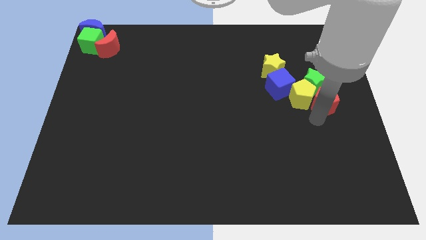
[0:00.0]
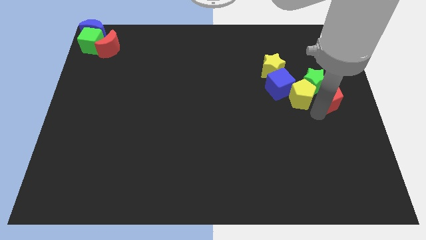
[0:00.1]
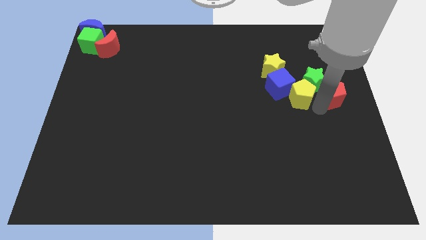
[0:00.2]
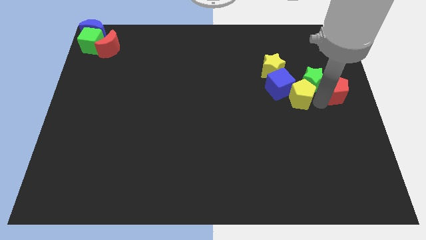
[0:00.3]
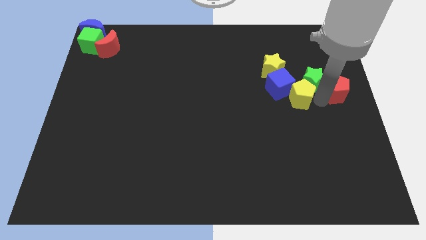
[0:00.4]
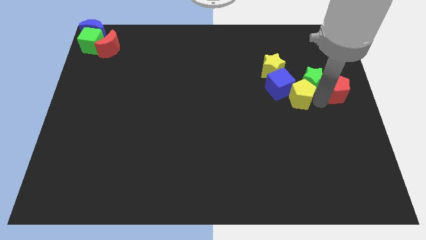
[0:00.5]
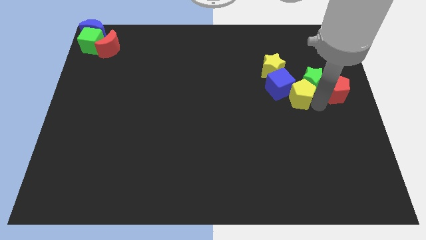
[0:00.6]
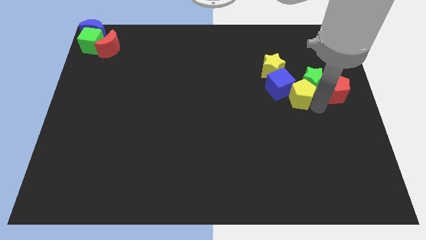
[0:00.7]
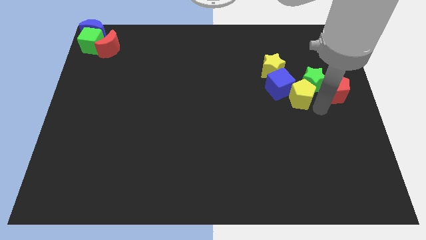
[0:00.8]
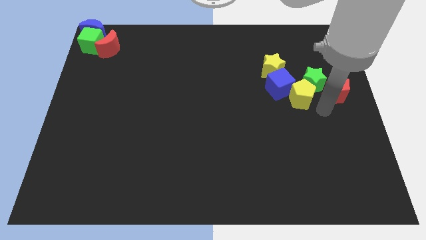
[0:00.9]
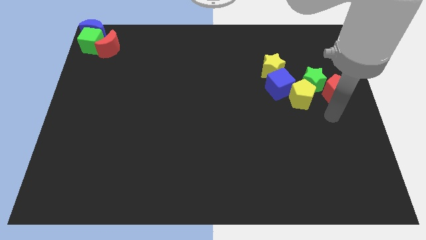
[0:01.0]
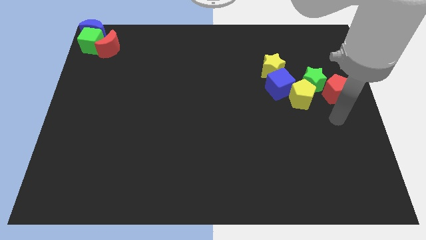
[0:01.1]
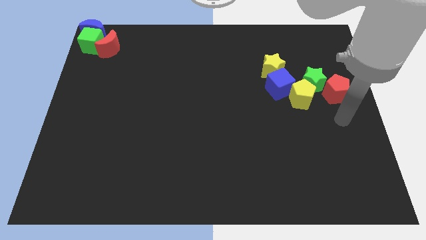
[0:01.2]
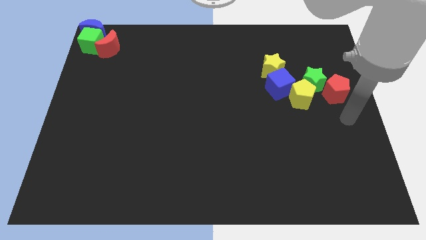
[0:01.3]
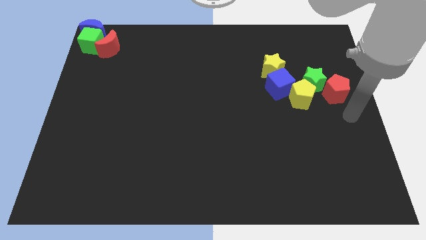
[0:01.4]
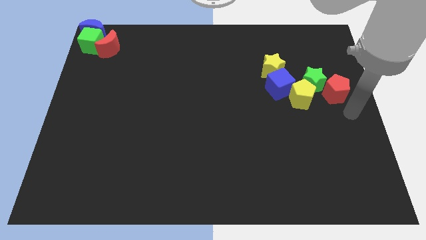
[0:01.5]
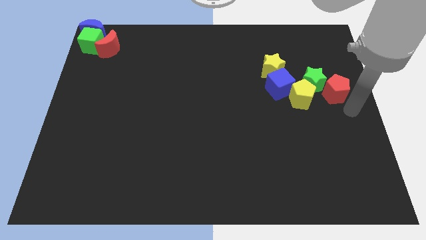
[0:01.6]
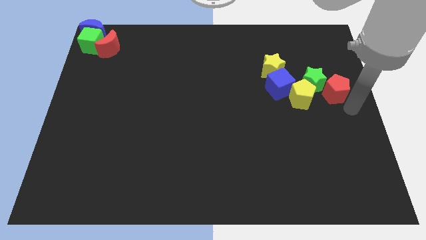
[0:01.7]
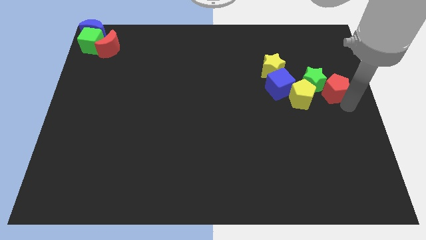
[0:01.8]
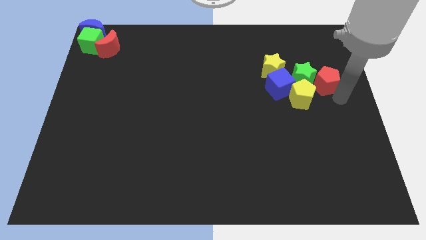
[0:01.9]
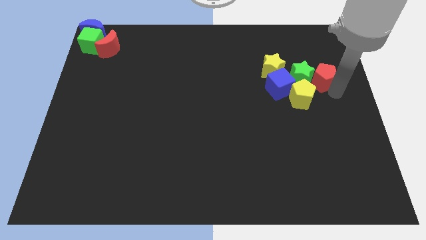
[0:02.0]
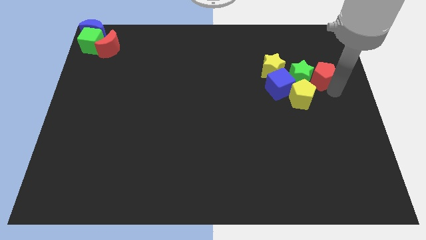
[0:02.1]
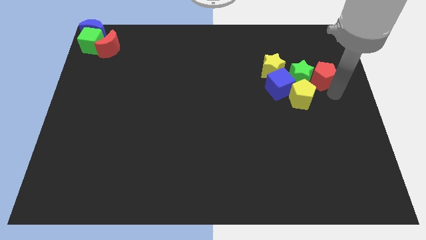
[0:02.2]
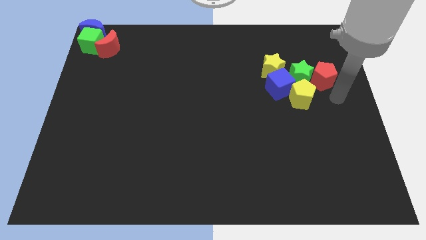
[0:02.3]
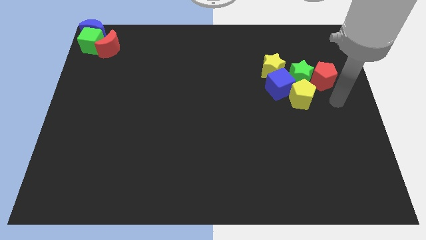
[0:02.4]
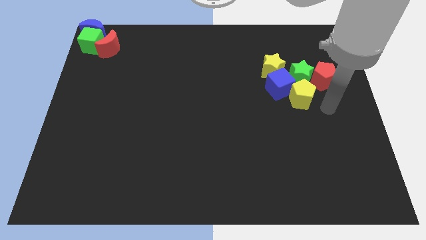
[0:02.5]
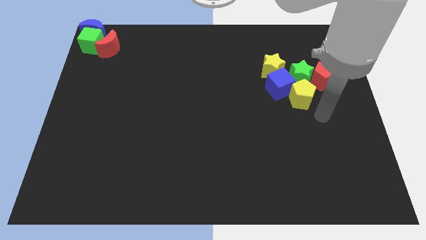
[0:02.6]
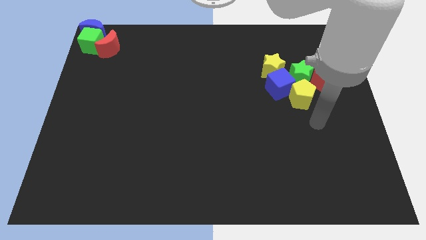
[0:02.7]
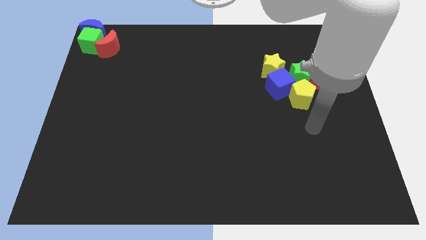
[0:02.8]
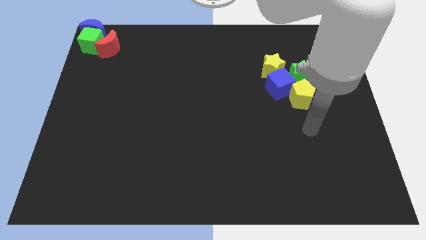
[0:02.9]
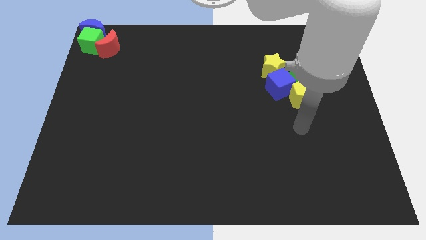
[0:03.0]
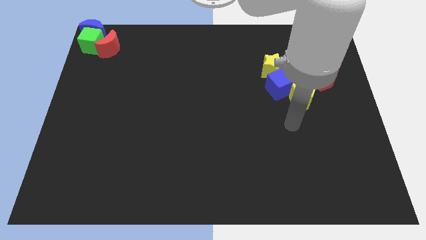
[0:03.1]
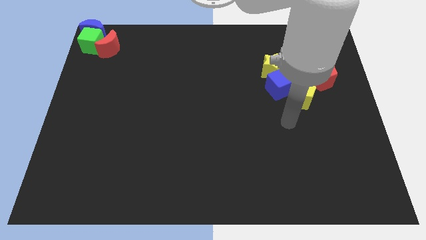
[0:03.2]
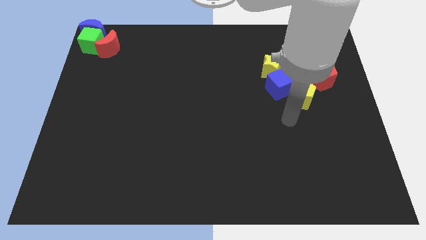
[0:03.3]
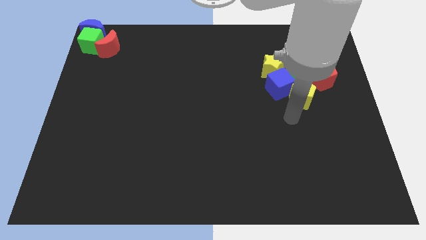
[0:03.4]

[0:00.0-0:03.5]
move the red pentagon to the right side of the green star

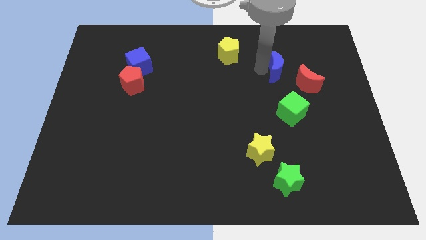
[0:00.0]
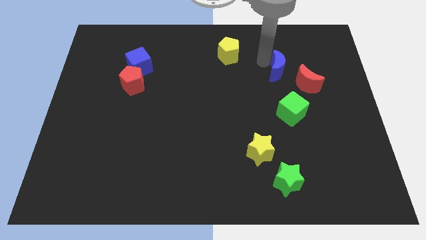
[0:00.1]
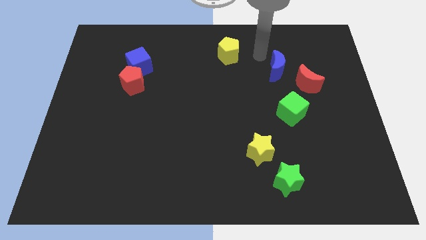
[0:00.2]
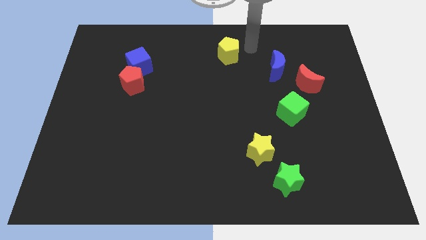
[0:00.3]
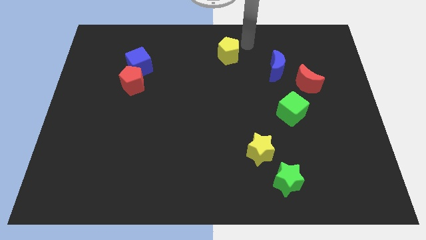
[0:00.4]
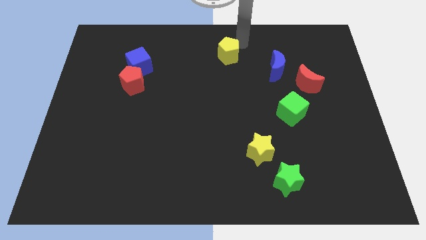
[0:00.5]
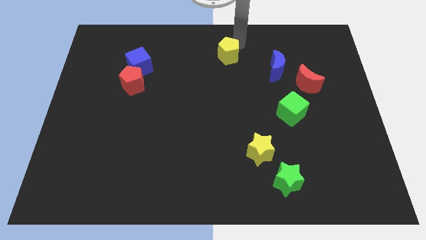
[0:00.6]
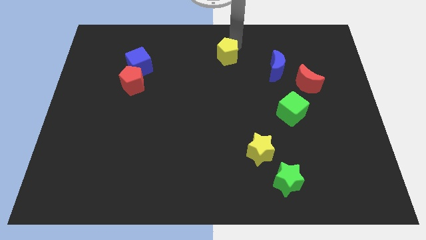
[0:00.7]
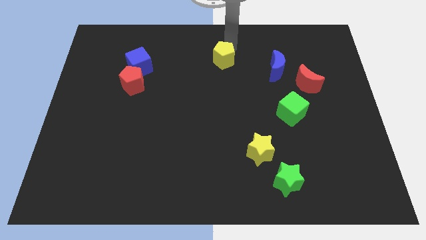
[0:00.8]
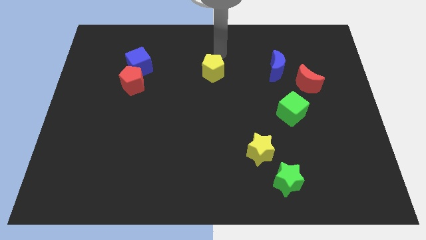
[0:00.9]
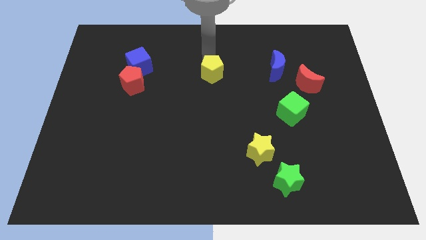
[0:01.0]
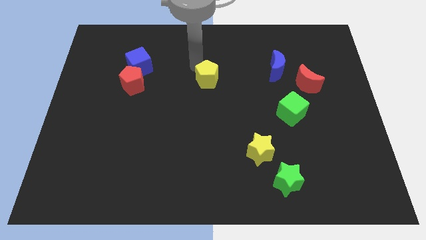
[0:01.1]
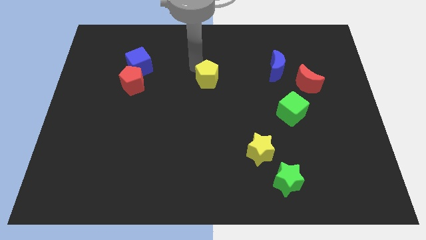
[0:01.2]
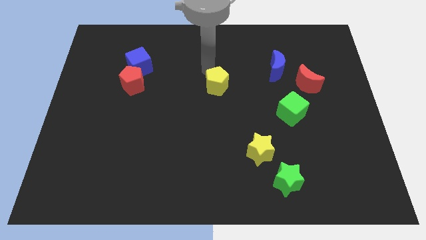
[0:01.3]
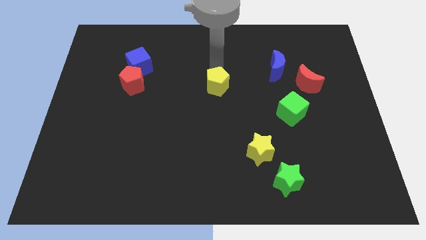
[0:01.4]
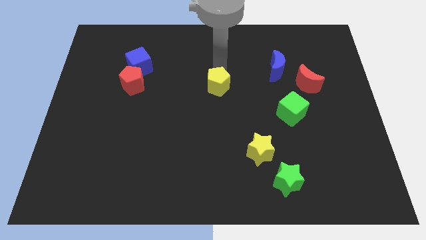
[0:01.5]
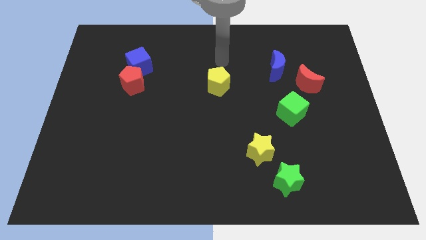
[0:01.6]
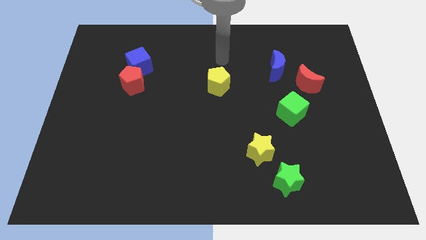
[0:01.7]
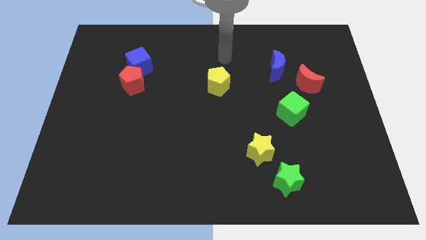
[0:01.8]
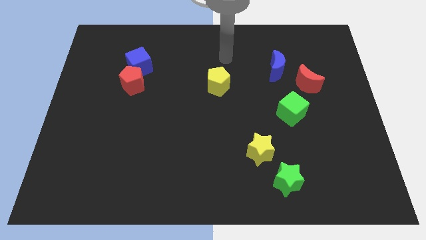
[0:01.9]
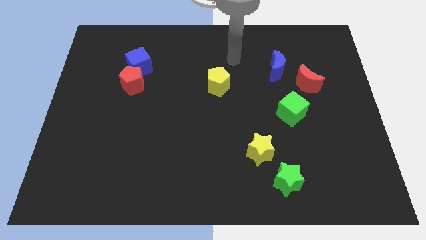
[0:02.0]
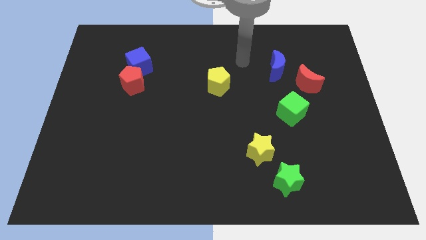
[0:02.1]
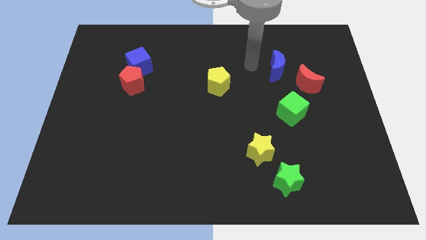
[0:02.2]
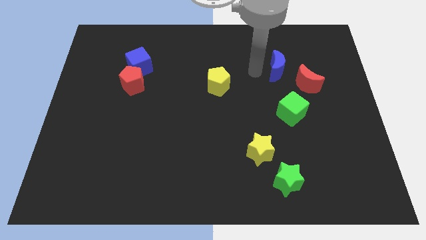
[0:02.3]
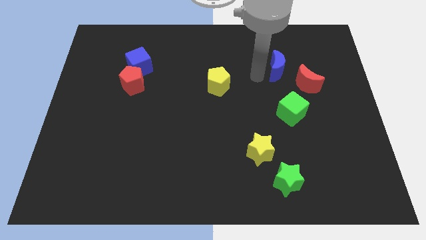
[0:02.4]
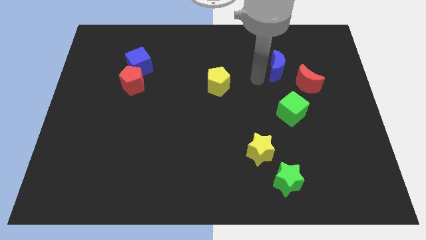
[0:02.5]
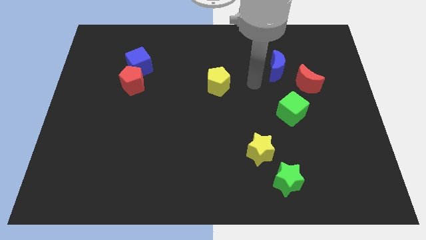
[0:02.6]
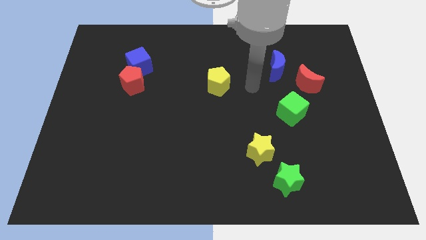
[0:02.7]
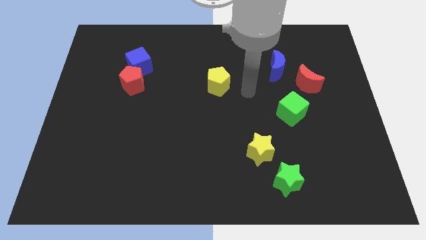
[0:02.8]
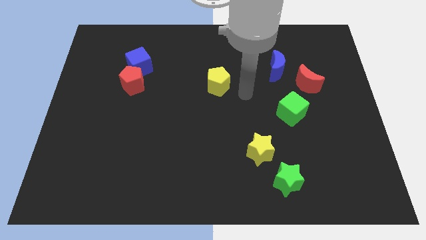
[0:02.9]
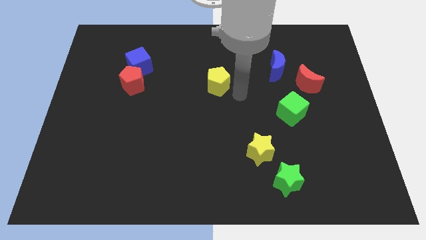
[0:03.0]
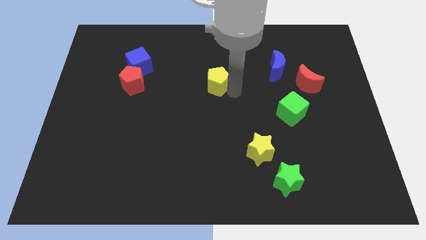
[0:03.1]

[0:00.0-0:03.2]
place the arm right to the yellow pentagon

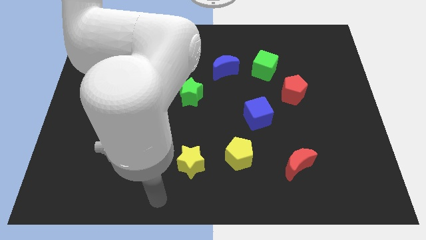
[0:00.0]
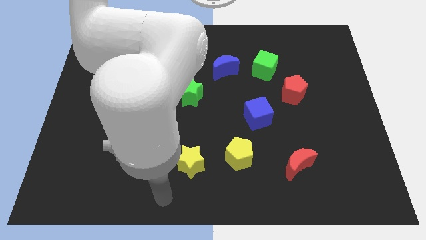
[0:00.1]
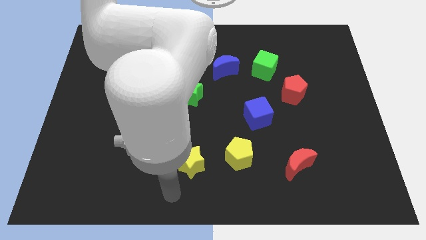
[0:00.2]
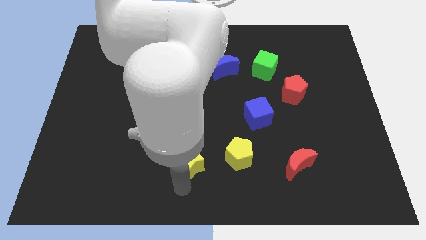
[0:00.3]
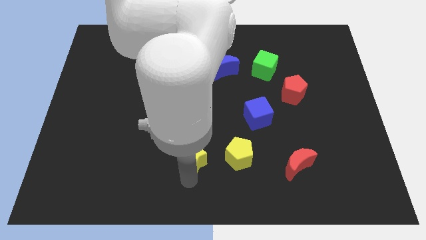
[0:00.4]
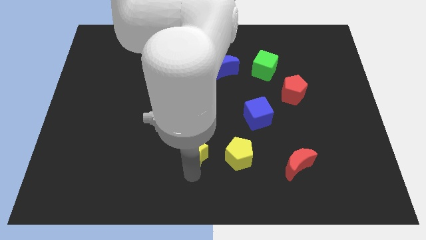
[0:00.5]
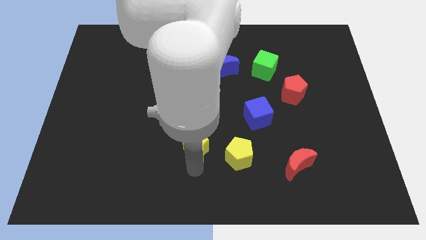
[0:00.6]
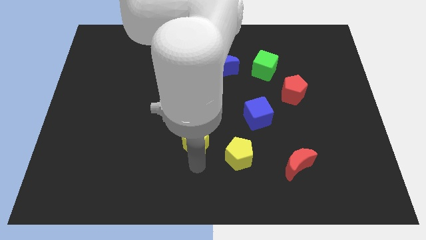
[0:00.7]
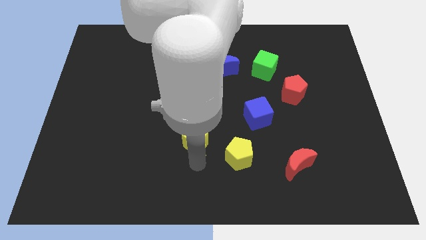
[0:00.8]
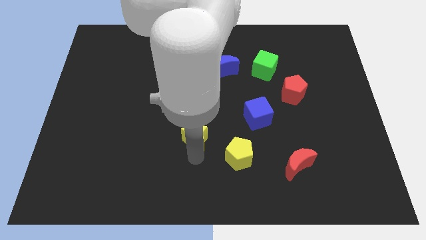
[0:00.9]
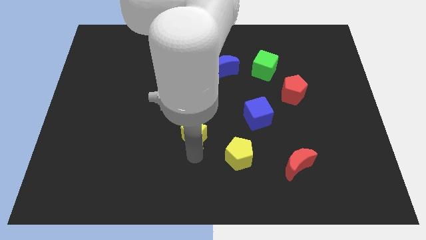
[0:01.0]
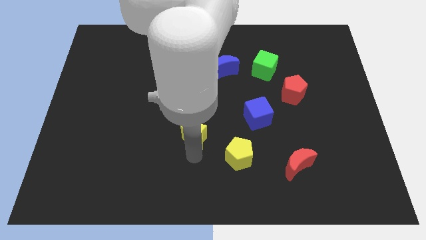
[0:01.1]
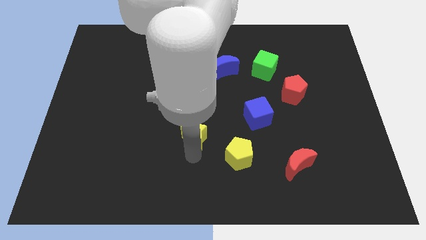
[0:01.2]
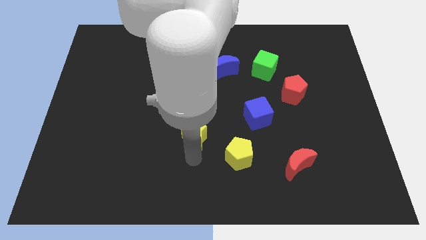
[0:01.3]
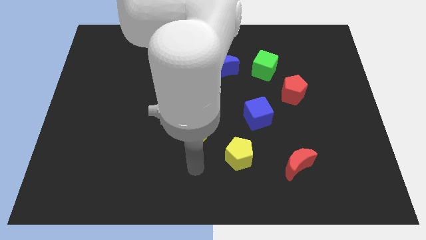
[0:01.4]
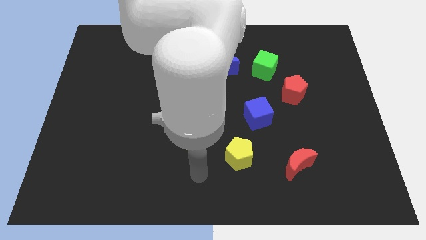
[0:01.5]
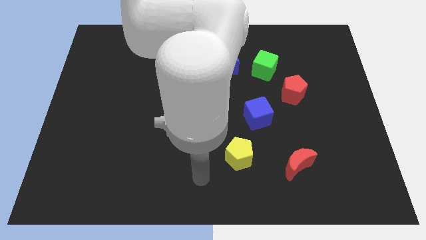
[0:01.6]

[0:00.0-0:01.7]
push the yellow star diagnol to the yellow pentagon on the top left side

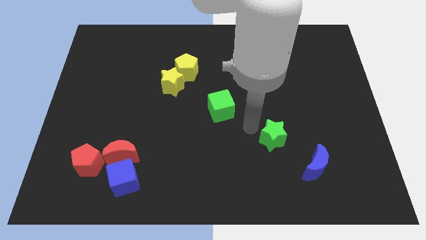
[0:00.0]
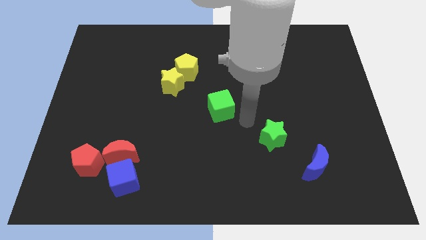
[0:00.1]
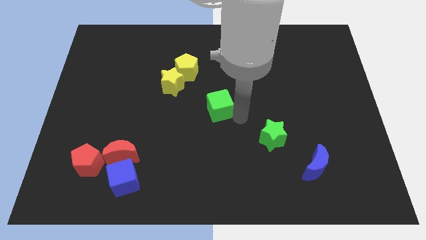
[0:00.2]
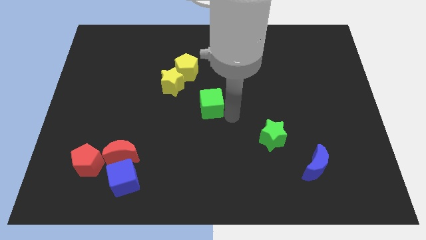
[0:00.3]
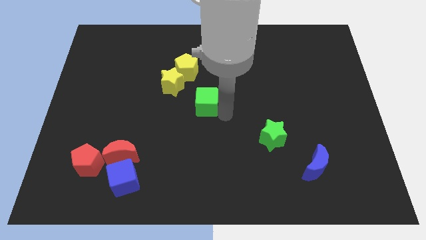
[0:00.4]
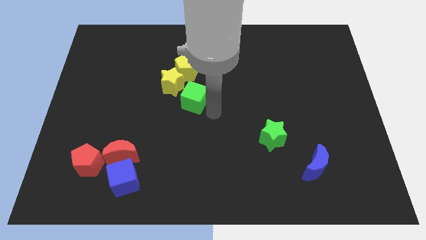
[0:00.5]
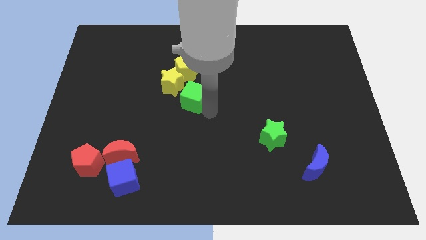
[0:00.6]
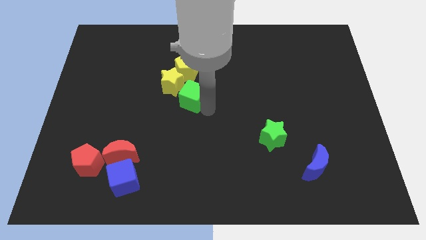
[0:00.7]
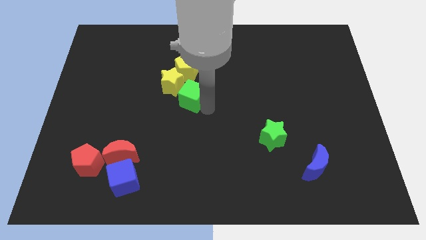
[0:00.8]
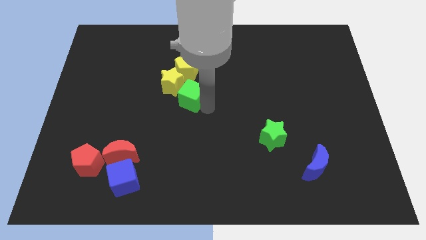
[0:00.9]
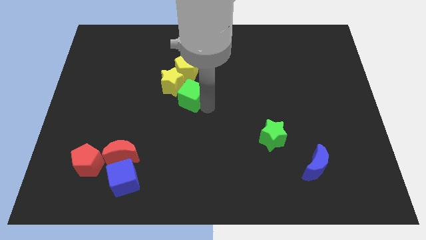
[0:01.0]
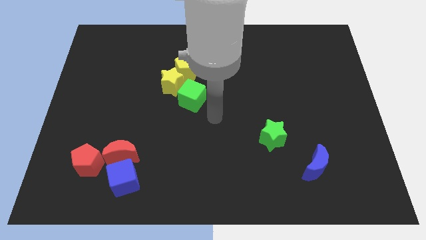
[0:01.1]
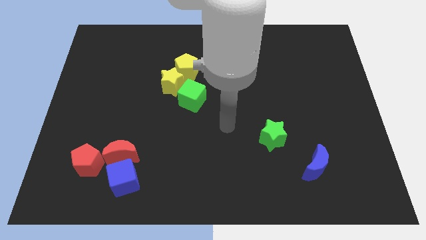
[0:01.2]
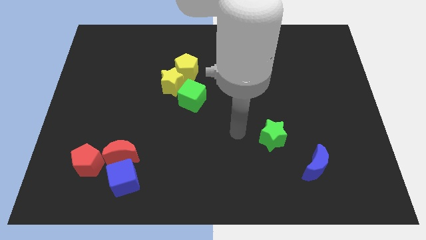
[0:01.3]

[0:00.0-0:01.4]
place green cube to the right of yellow star
